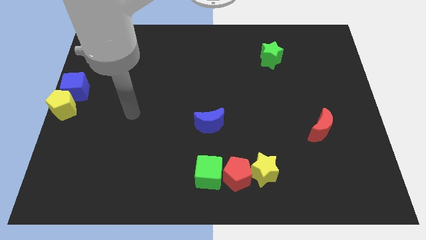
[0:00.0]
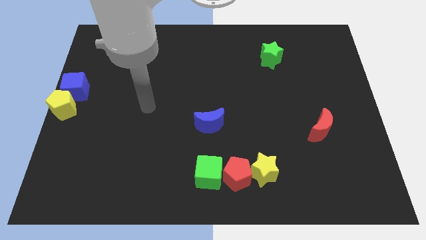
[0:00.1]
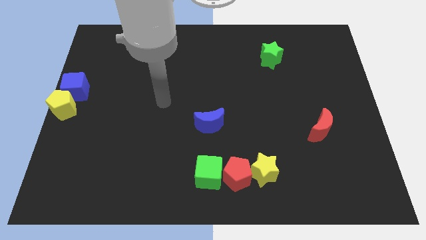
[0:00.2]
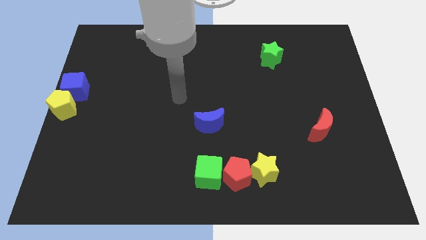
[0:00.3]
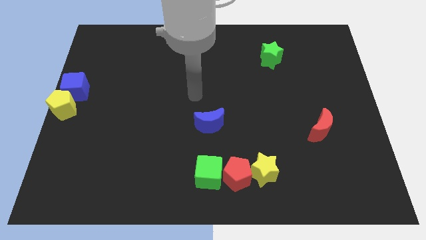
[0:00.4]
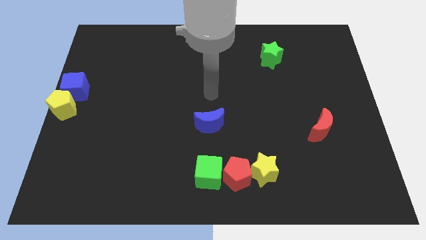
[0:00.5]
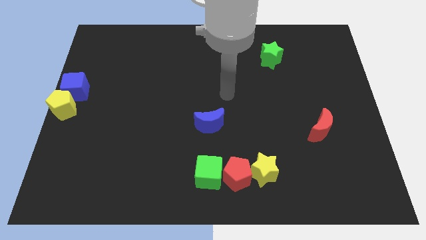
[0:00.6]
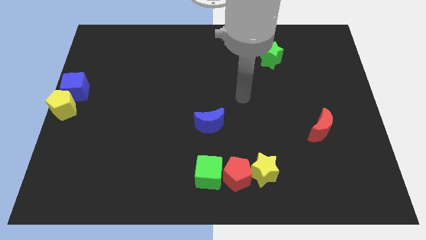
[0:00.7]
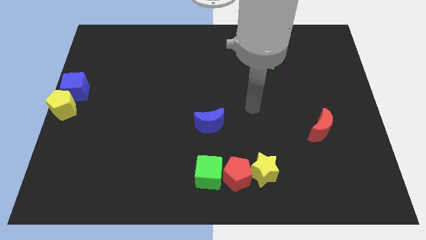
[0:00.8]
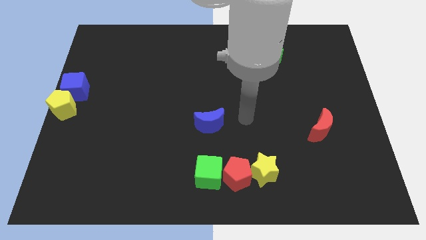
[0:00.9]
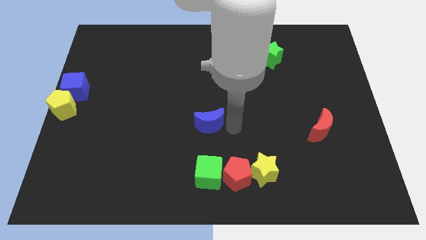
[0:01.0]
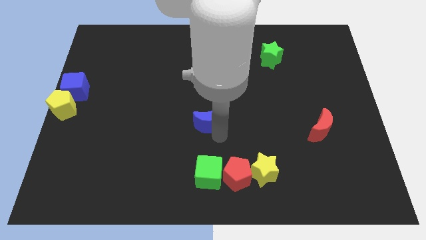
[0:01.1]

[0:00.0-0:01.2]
move your arm towards blue crescent

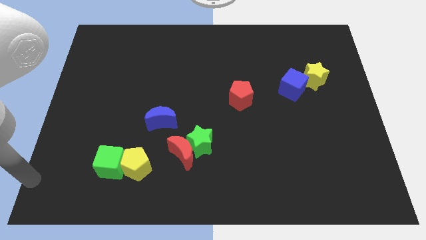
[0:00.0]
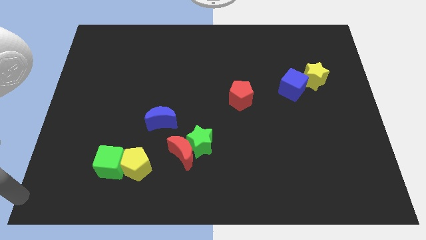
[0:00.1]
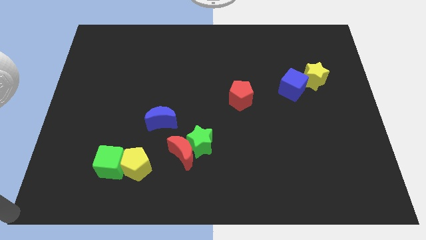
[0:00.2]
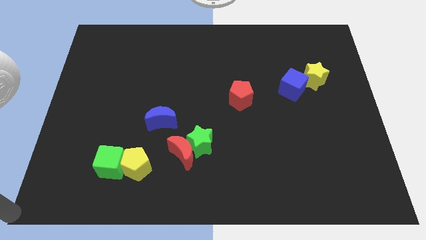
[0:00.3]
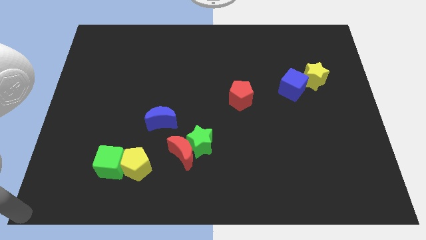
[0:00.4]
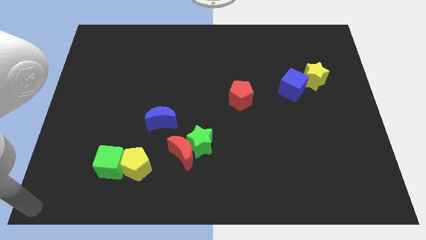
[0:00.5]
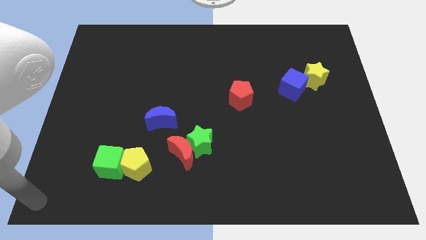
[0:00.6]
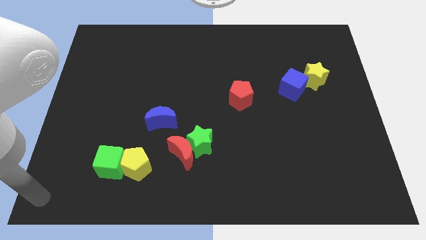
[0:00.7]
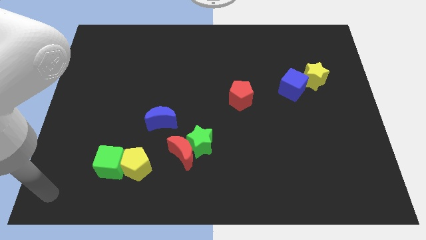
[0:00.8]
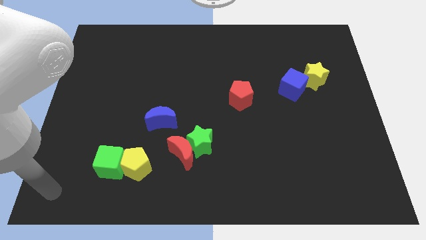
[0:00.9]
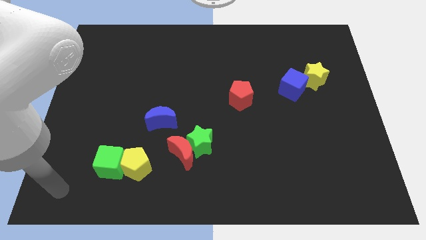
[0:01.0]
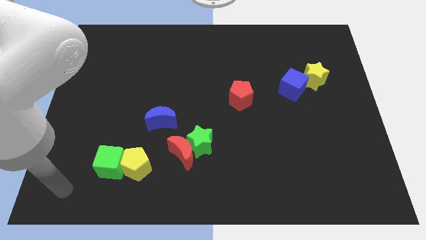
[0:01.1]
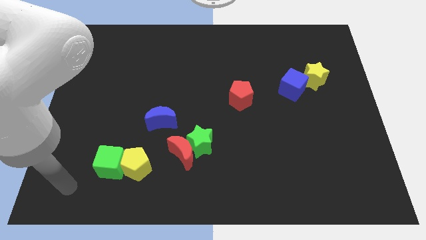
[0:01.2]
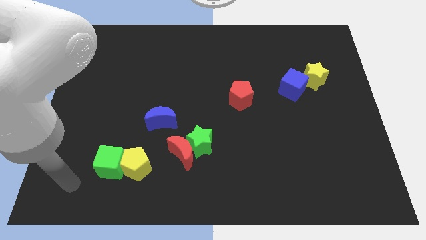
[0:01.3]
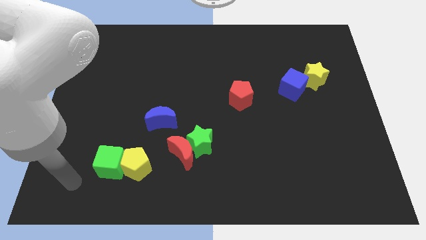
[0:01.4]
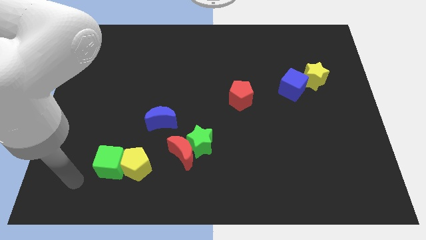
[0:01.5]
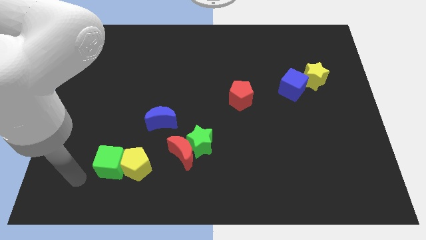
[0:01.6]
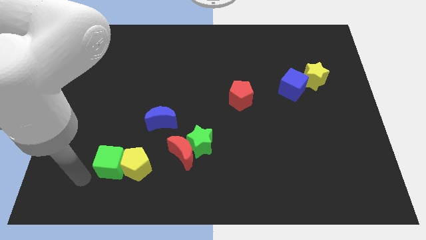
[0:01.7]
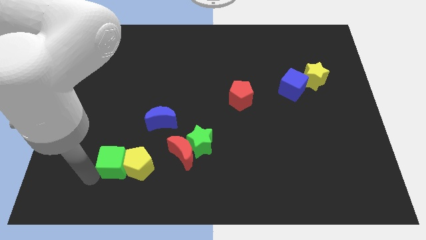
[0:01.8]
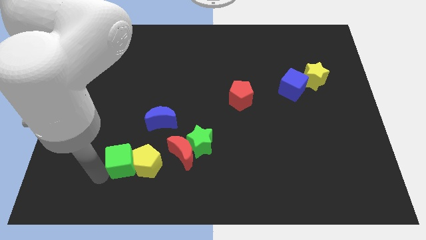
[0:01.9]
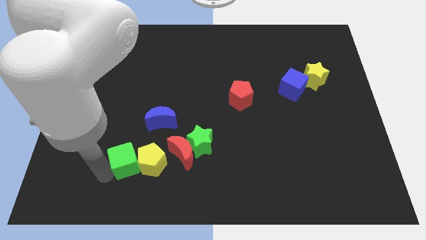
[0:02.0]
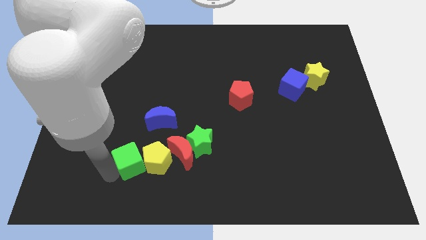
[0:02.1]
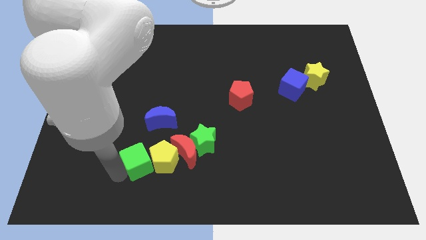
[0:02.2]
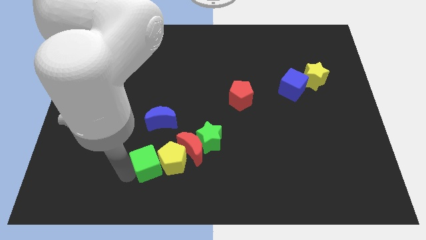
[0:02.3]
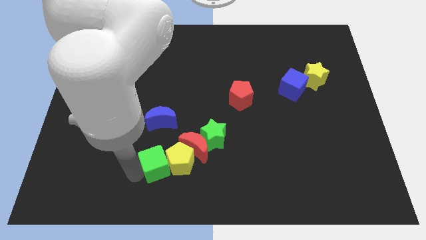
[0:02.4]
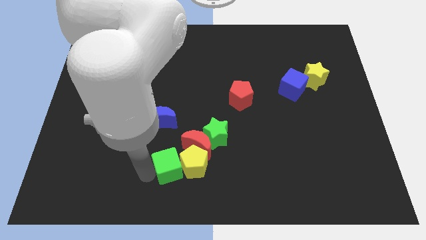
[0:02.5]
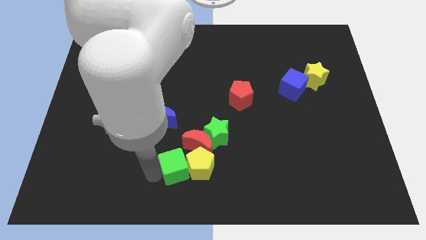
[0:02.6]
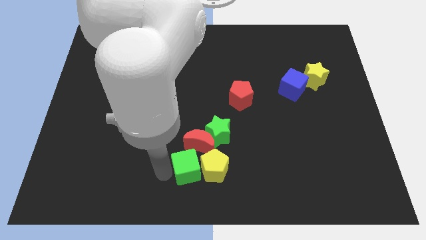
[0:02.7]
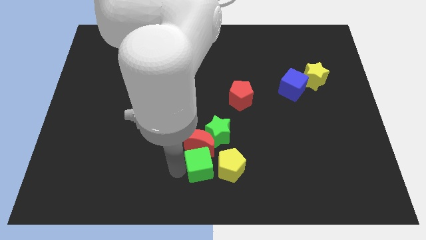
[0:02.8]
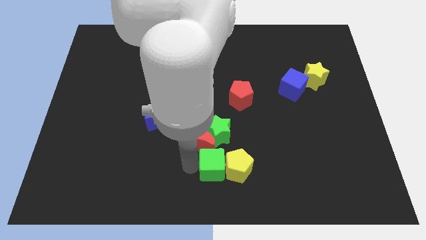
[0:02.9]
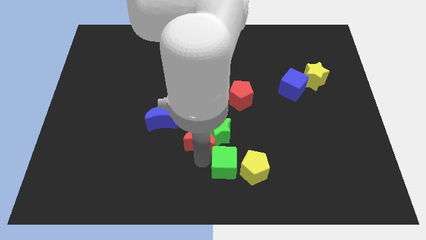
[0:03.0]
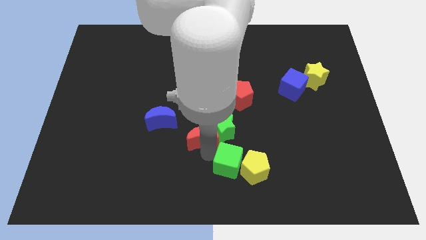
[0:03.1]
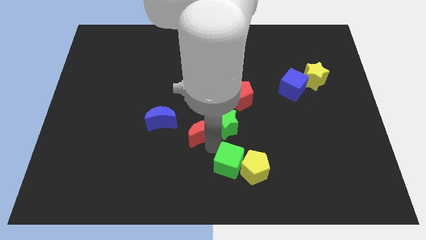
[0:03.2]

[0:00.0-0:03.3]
slightly move the yellow pentagon with a green cube to the right

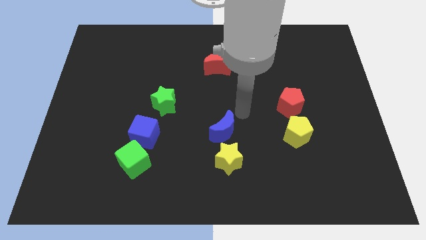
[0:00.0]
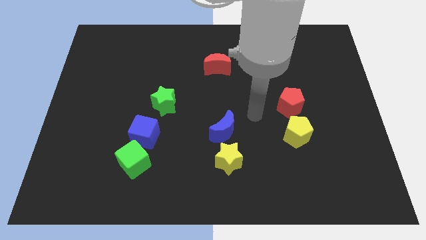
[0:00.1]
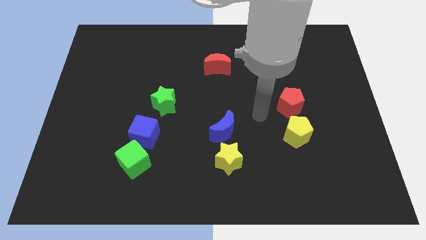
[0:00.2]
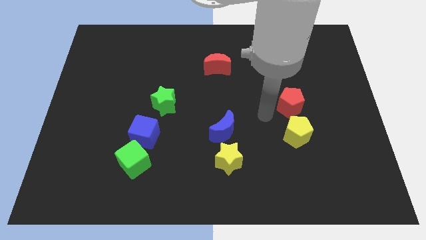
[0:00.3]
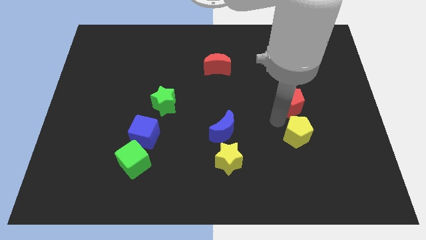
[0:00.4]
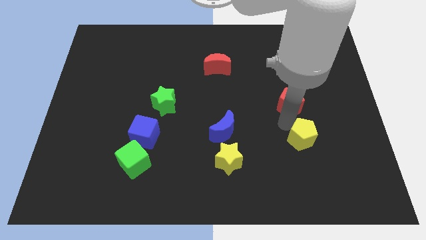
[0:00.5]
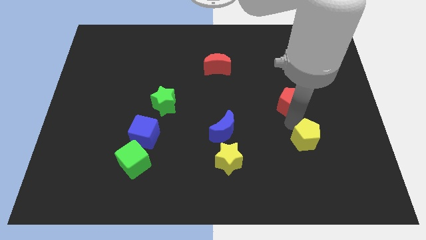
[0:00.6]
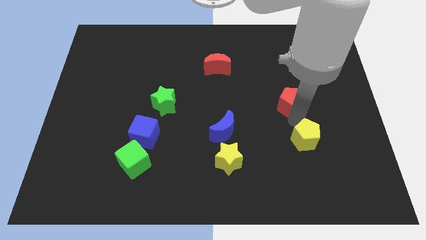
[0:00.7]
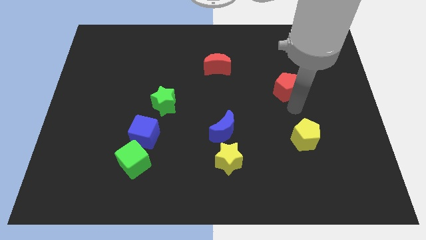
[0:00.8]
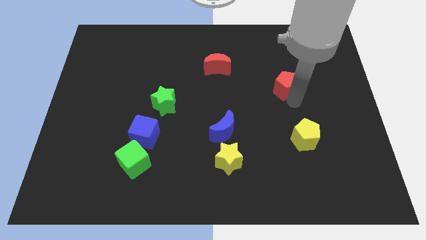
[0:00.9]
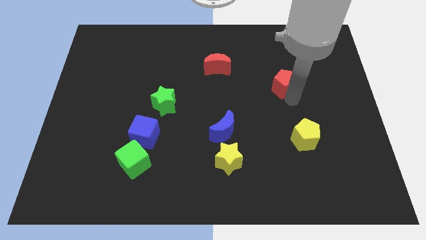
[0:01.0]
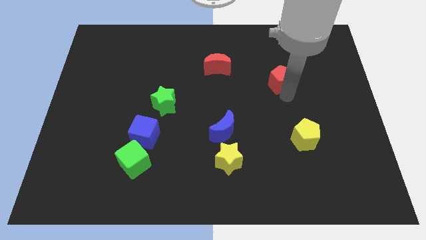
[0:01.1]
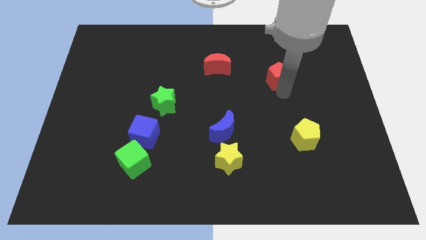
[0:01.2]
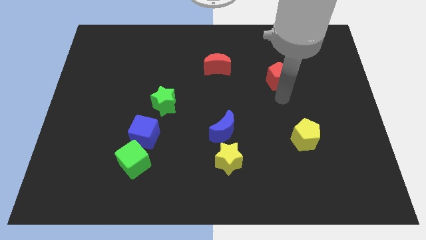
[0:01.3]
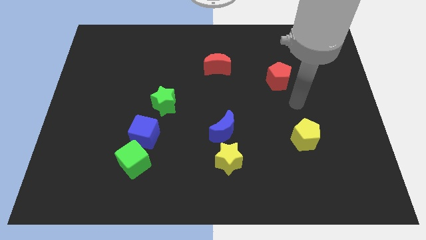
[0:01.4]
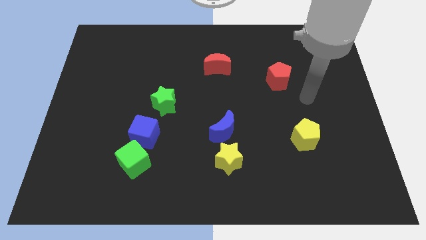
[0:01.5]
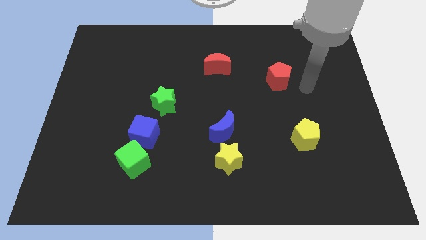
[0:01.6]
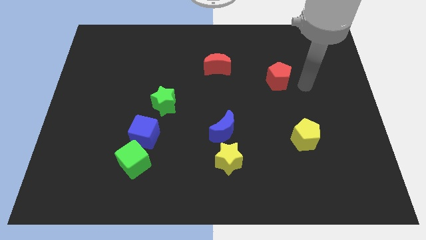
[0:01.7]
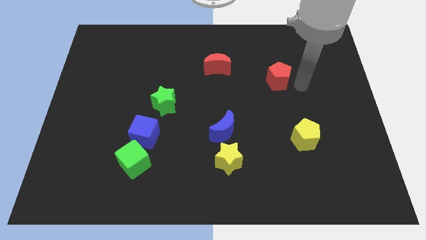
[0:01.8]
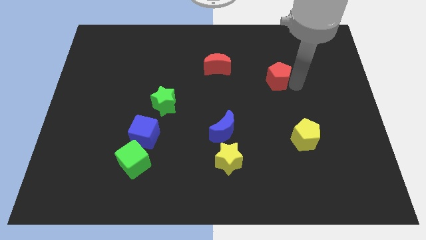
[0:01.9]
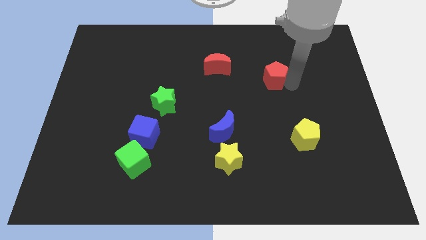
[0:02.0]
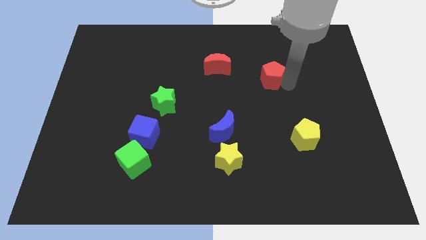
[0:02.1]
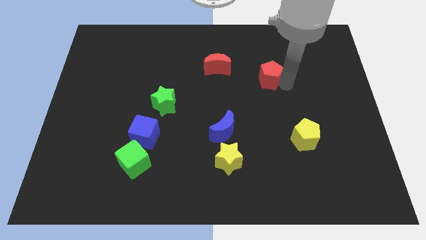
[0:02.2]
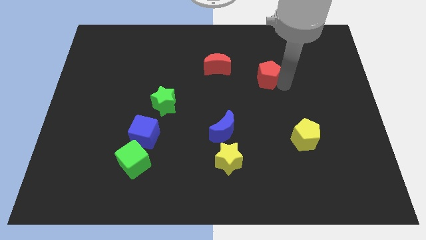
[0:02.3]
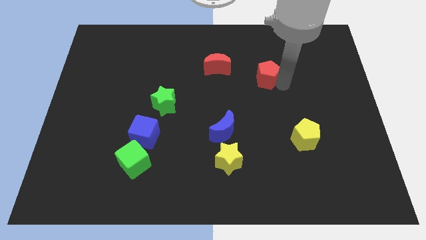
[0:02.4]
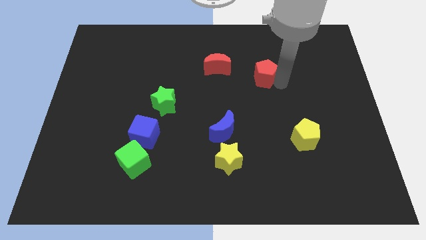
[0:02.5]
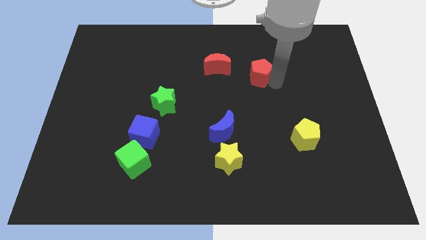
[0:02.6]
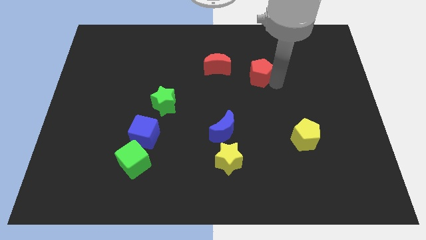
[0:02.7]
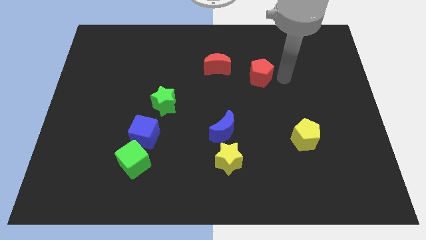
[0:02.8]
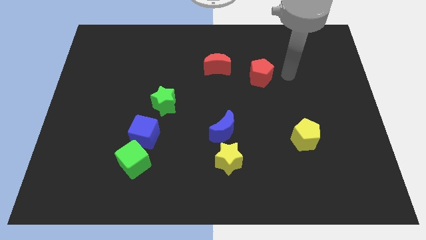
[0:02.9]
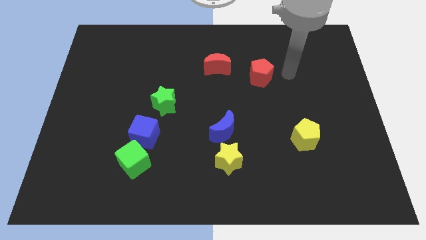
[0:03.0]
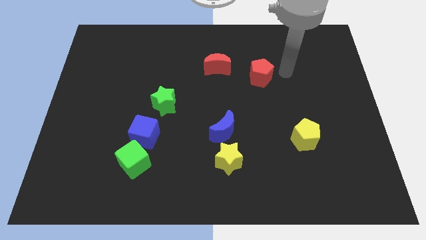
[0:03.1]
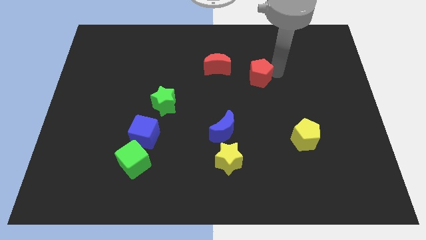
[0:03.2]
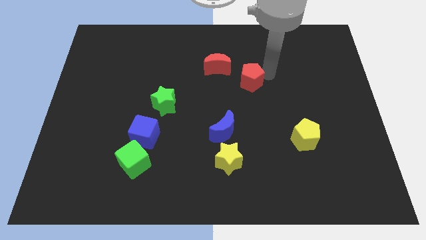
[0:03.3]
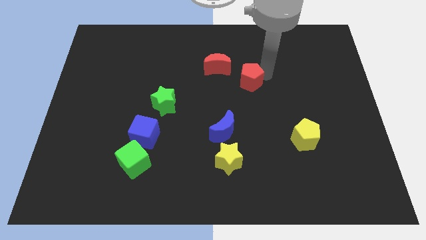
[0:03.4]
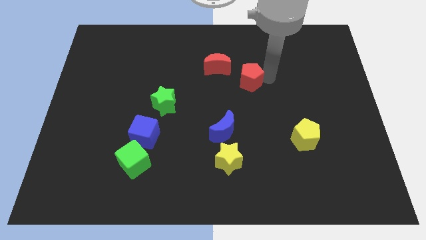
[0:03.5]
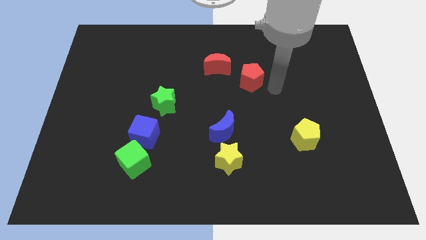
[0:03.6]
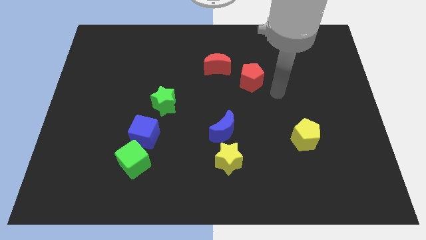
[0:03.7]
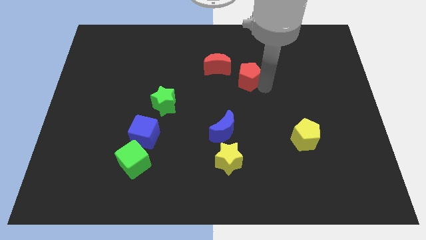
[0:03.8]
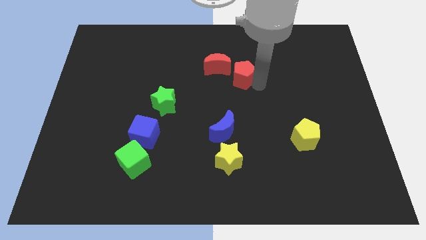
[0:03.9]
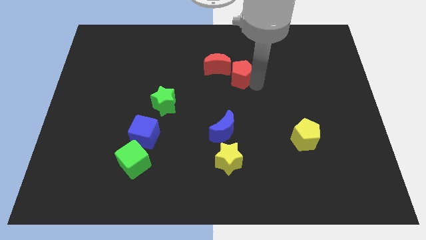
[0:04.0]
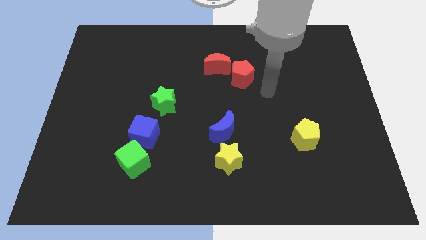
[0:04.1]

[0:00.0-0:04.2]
place the red pentagon to the right of the red crescent

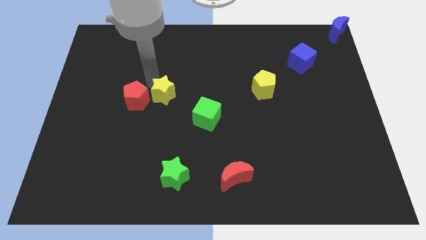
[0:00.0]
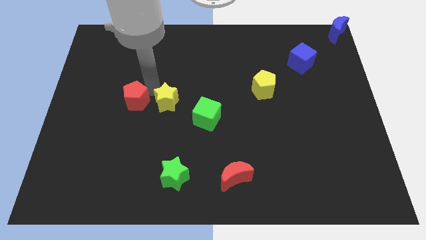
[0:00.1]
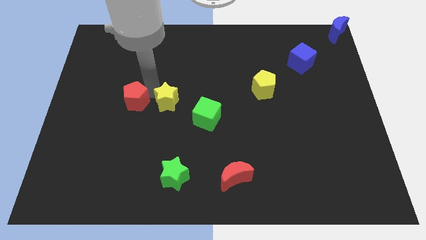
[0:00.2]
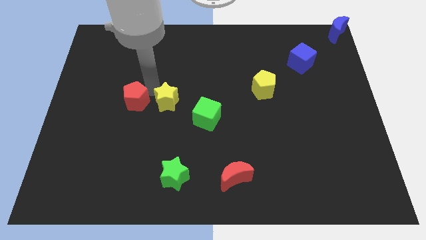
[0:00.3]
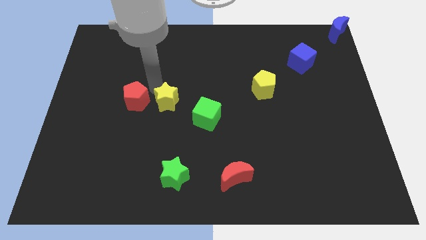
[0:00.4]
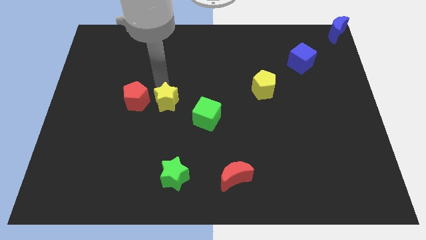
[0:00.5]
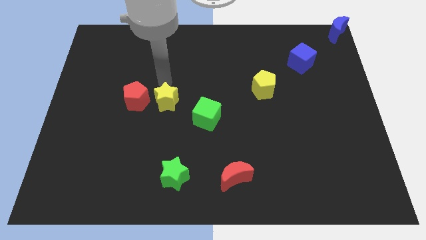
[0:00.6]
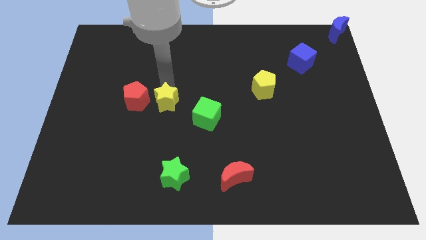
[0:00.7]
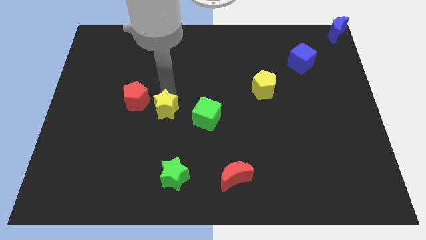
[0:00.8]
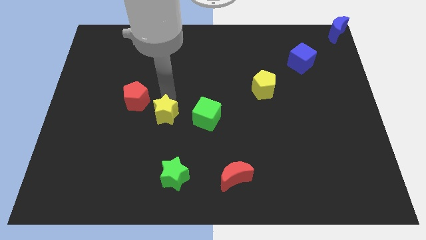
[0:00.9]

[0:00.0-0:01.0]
place the yellow star in the between the green cube and red pentagon
